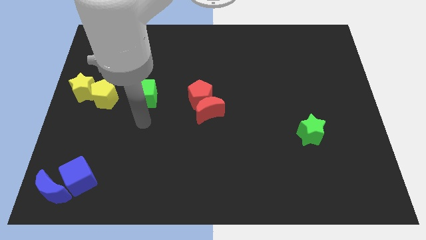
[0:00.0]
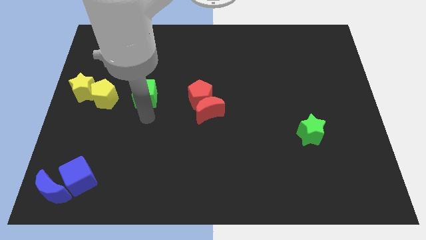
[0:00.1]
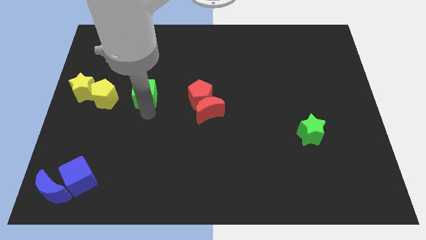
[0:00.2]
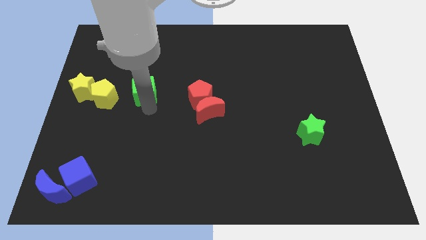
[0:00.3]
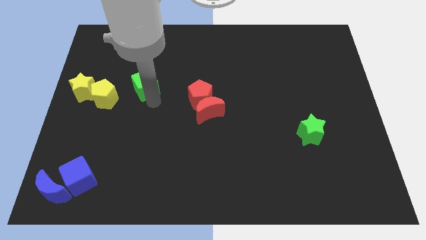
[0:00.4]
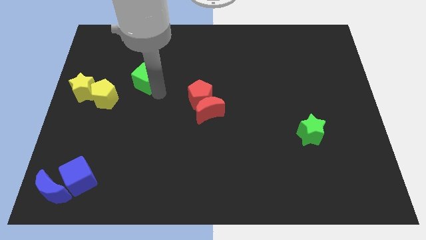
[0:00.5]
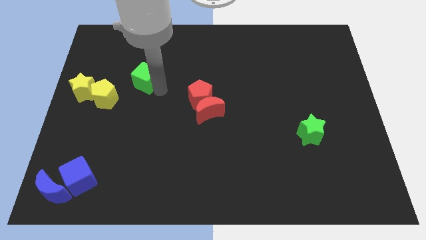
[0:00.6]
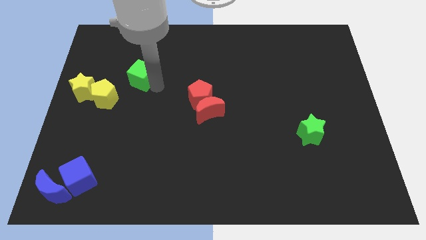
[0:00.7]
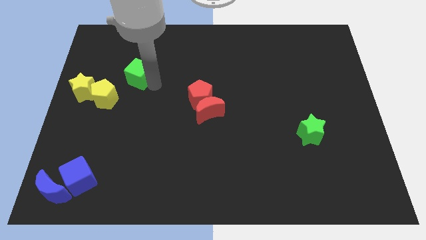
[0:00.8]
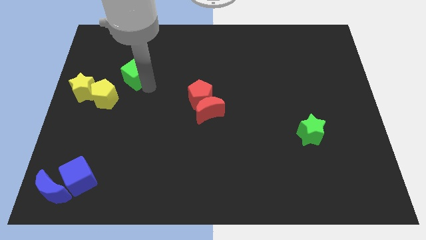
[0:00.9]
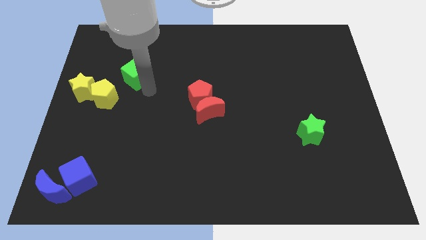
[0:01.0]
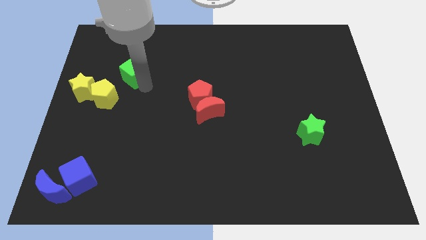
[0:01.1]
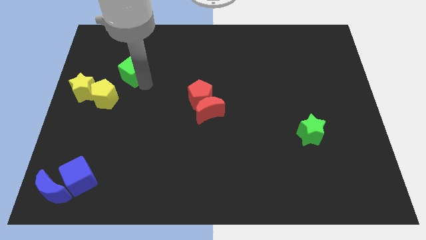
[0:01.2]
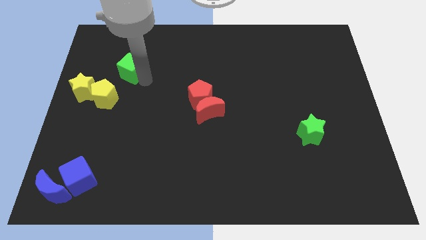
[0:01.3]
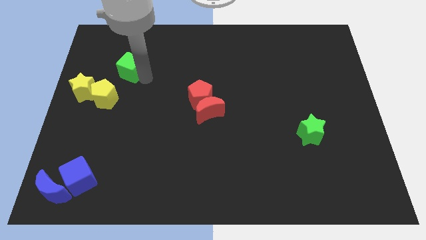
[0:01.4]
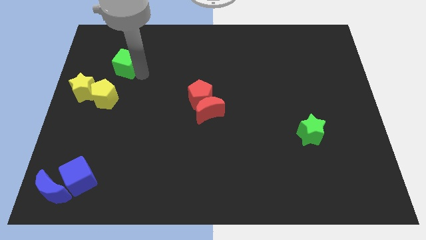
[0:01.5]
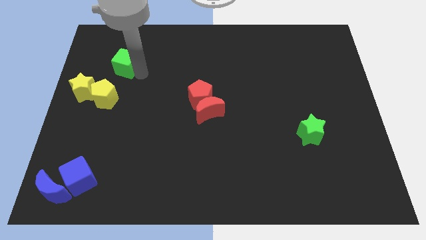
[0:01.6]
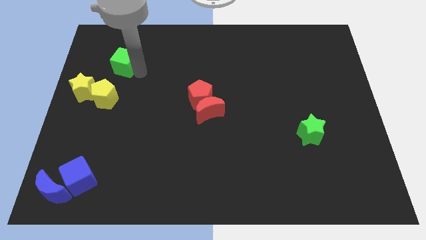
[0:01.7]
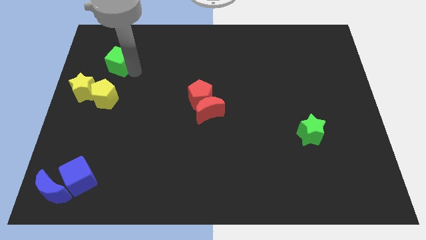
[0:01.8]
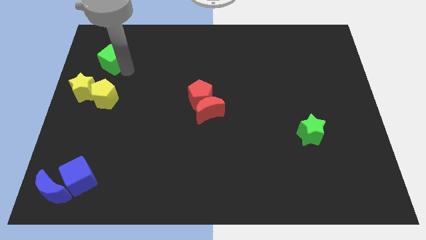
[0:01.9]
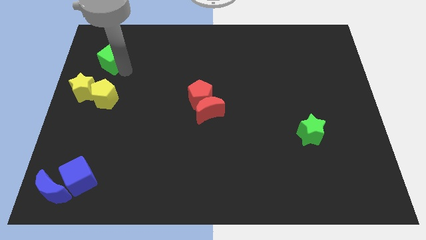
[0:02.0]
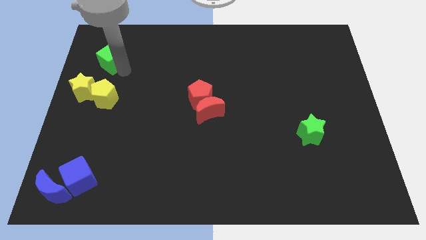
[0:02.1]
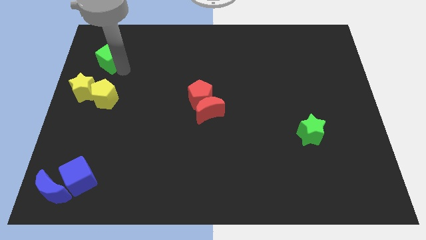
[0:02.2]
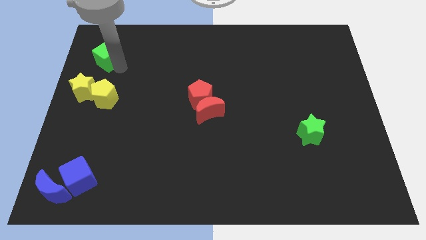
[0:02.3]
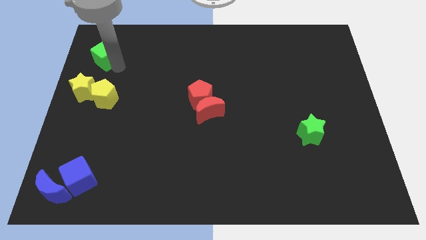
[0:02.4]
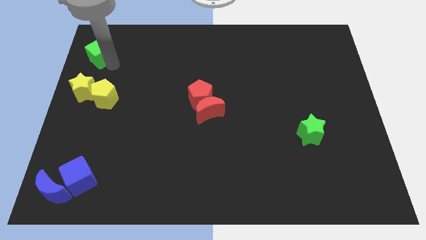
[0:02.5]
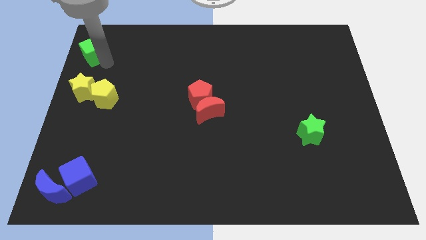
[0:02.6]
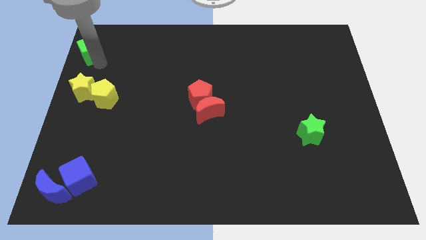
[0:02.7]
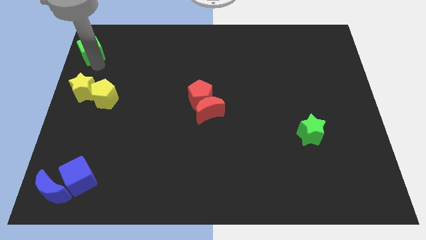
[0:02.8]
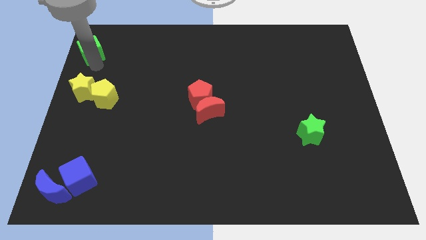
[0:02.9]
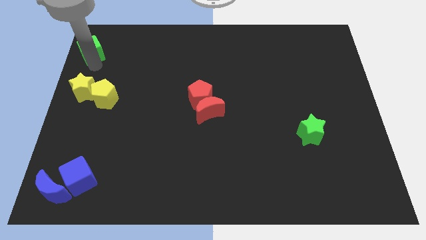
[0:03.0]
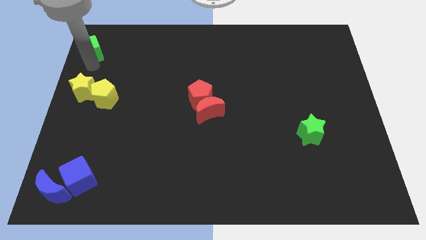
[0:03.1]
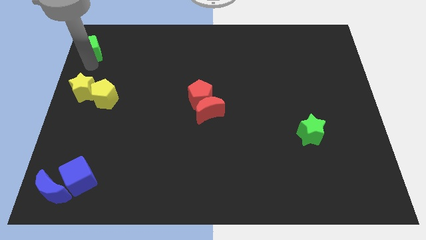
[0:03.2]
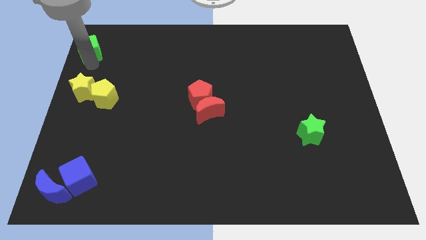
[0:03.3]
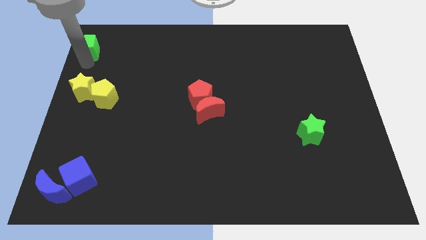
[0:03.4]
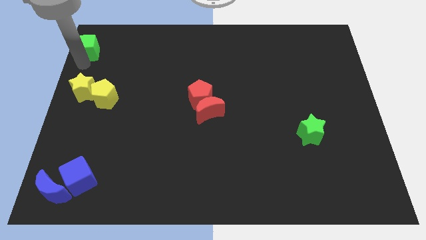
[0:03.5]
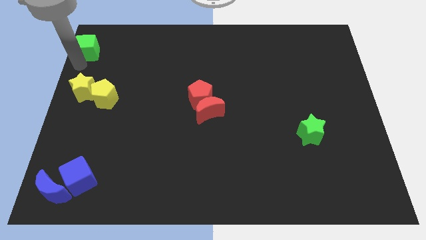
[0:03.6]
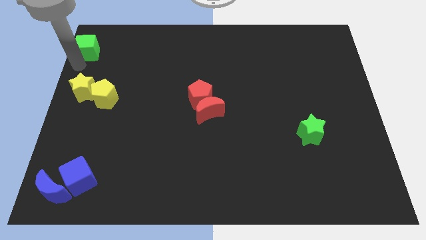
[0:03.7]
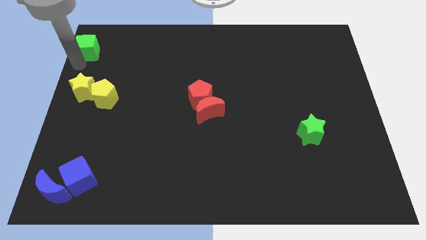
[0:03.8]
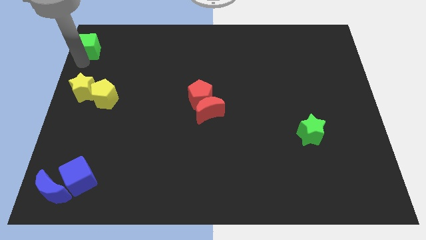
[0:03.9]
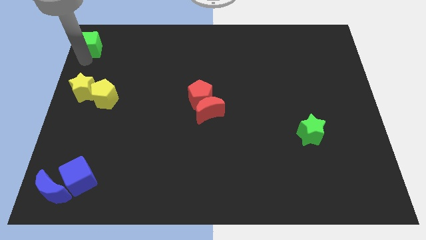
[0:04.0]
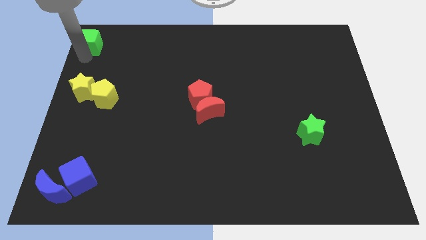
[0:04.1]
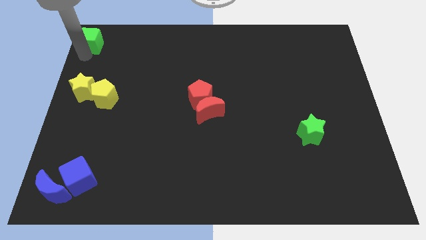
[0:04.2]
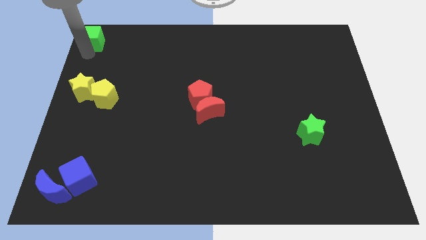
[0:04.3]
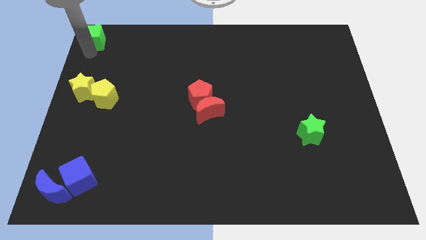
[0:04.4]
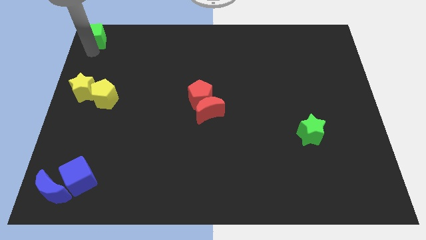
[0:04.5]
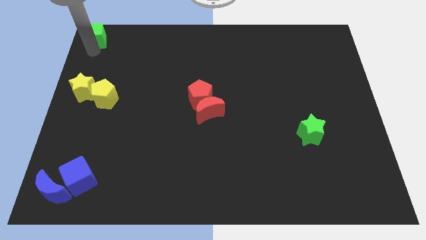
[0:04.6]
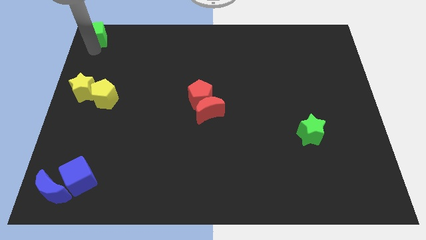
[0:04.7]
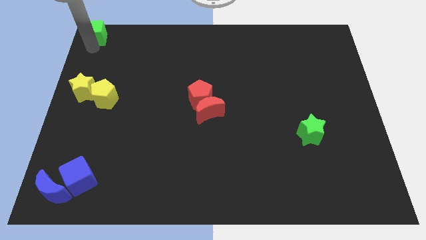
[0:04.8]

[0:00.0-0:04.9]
move the green cube to the top left corner

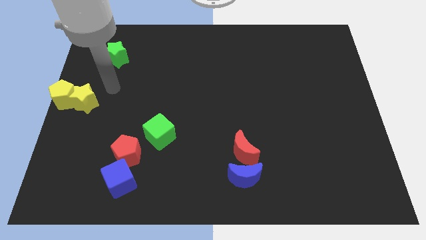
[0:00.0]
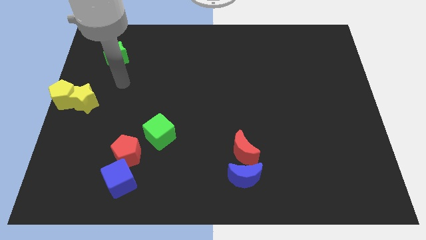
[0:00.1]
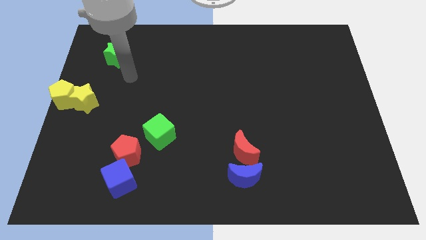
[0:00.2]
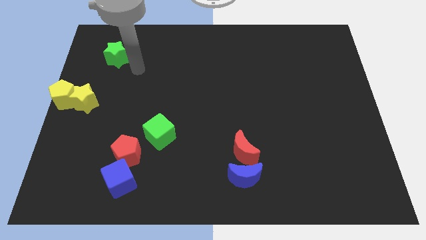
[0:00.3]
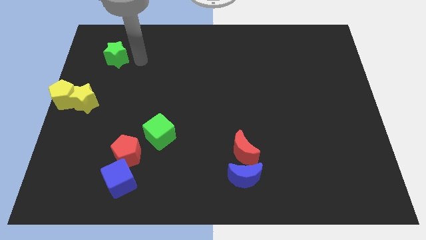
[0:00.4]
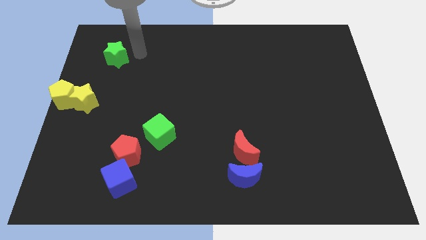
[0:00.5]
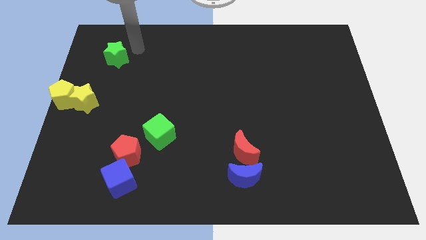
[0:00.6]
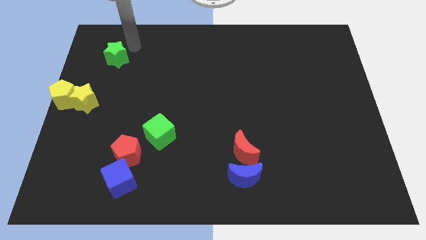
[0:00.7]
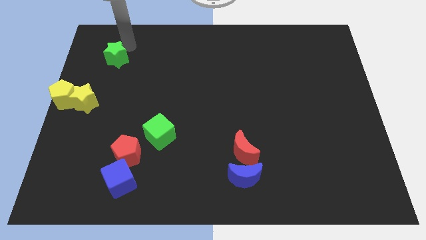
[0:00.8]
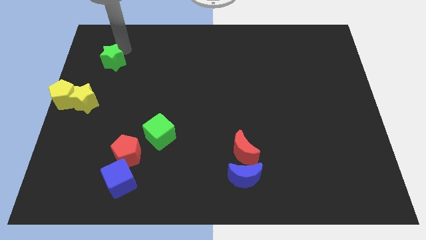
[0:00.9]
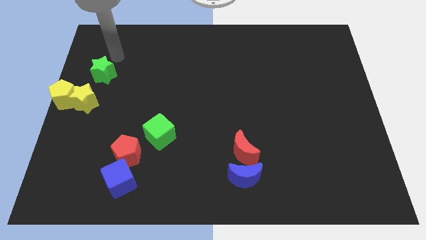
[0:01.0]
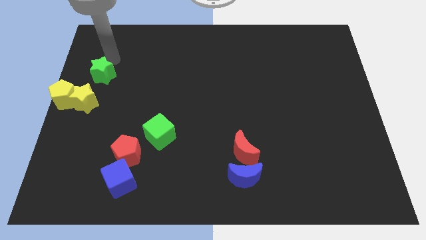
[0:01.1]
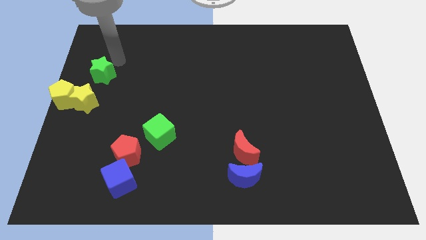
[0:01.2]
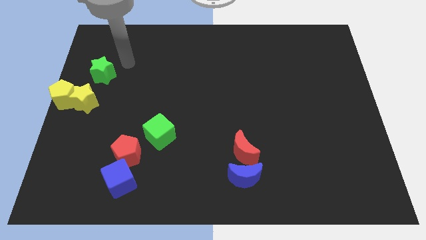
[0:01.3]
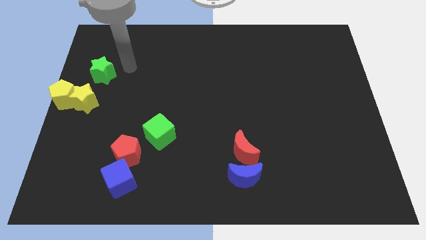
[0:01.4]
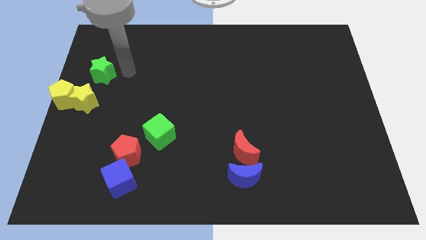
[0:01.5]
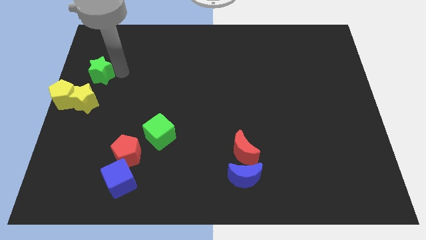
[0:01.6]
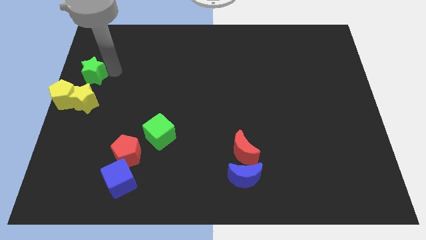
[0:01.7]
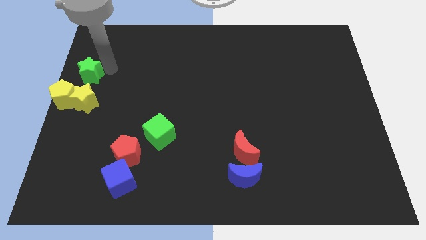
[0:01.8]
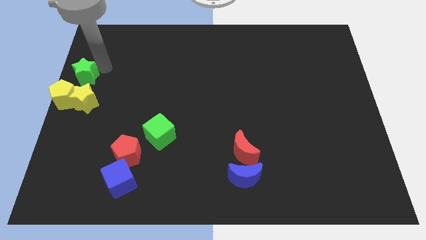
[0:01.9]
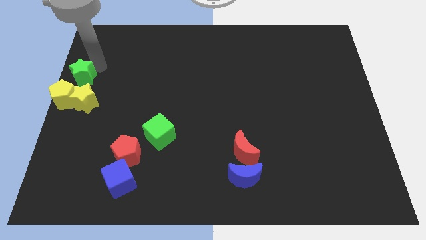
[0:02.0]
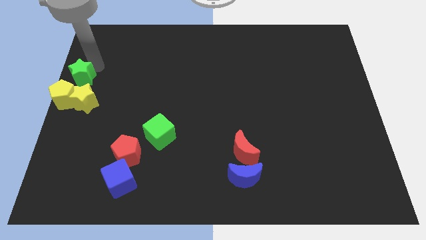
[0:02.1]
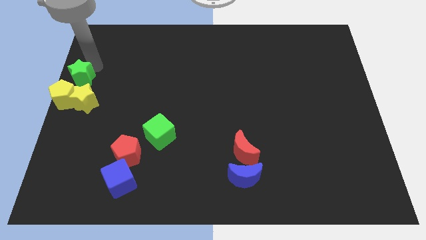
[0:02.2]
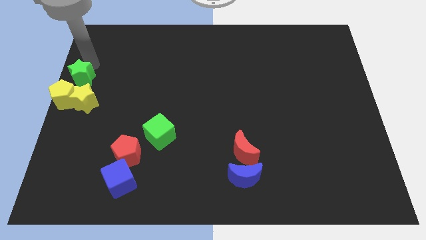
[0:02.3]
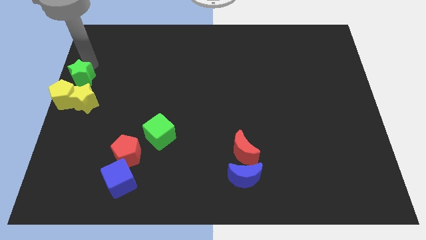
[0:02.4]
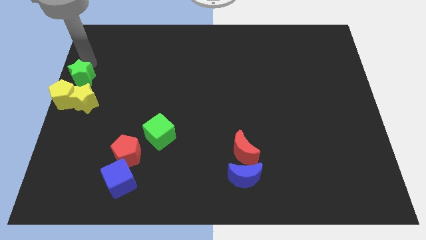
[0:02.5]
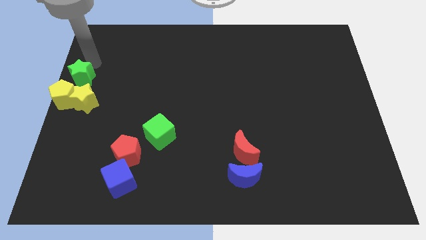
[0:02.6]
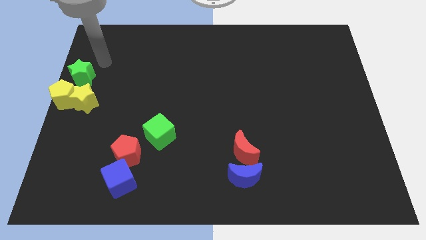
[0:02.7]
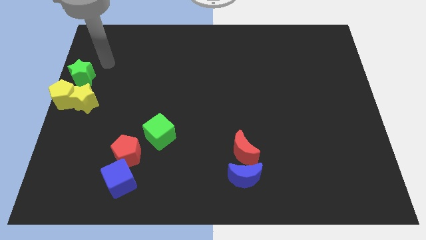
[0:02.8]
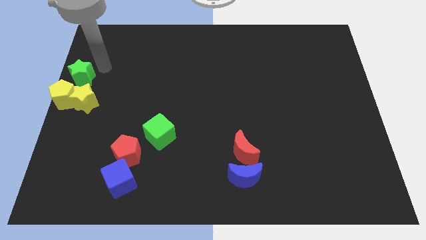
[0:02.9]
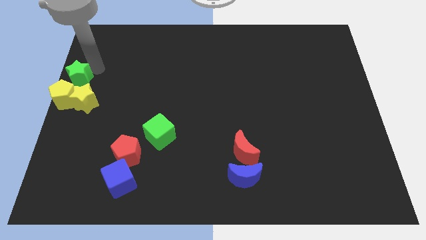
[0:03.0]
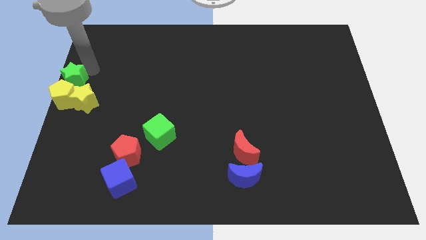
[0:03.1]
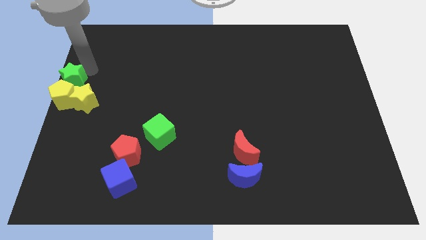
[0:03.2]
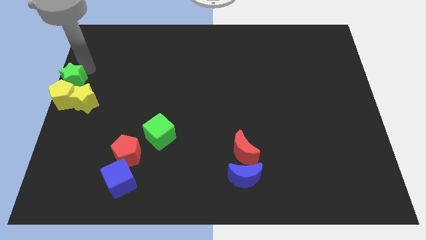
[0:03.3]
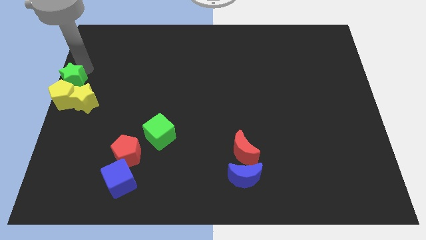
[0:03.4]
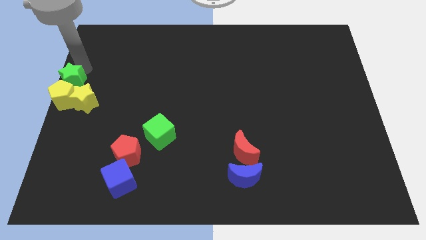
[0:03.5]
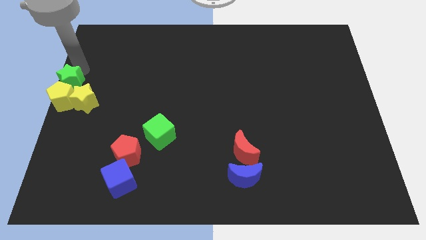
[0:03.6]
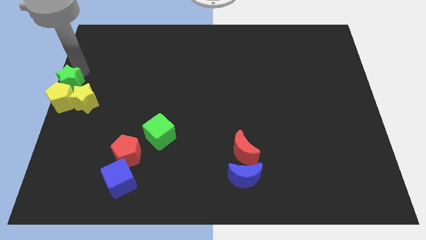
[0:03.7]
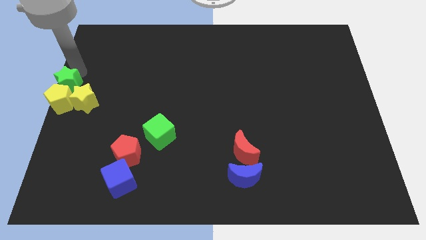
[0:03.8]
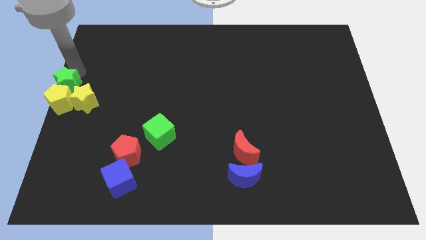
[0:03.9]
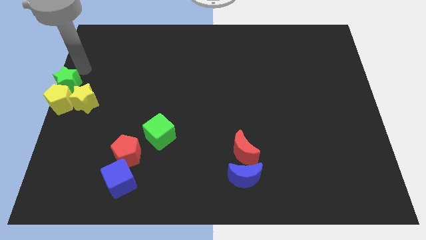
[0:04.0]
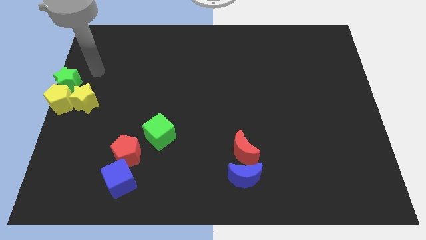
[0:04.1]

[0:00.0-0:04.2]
push the green star above the yellow pentagon
